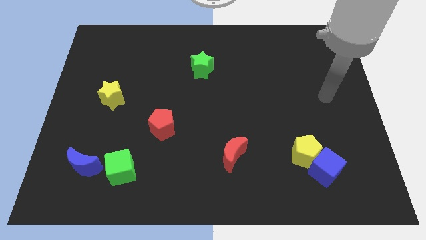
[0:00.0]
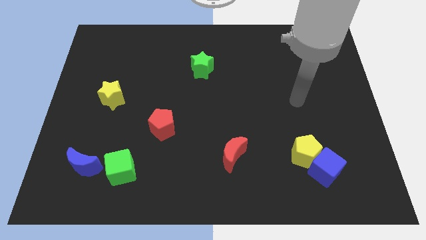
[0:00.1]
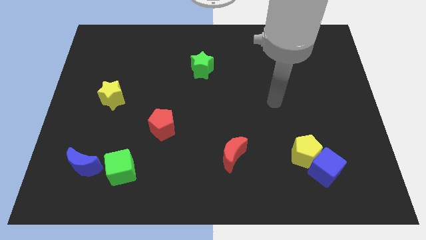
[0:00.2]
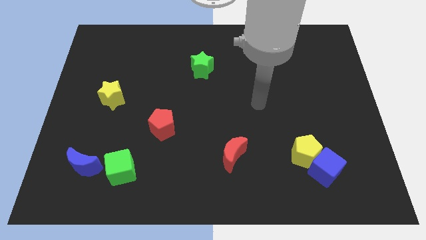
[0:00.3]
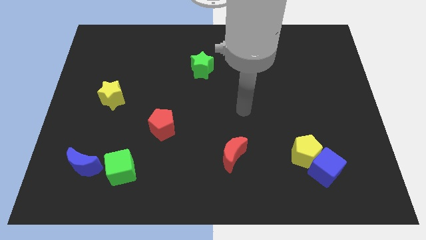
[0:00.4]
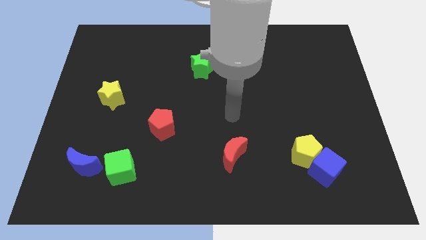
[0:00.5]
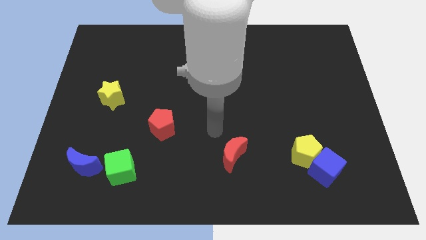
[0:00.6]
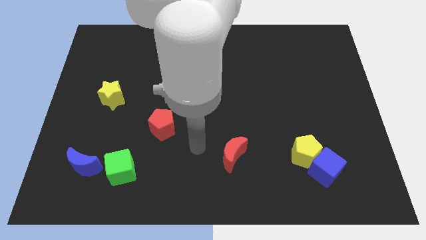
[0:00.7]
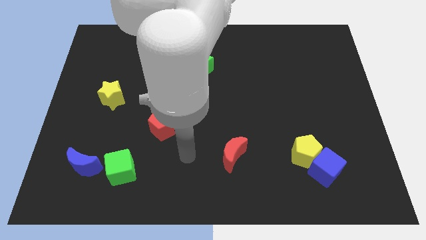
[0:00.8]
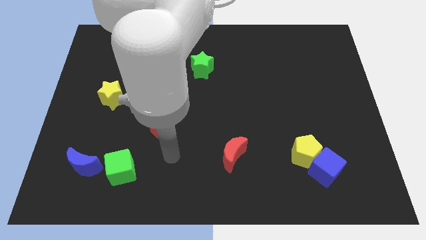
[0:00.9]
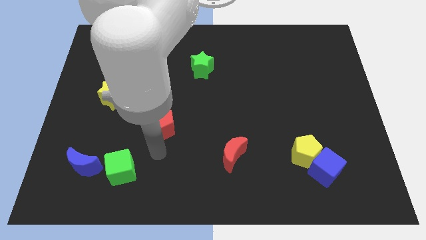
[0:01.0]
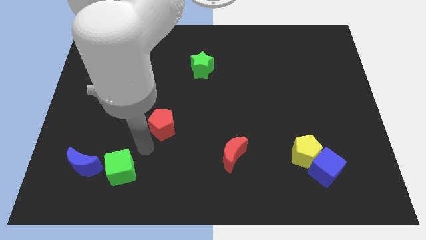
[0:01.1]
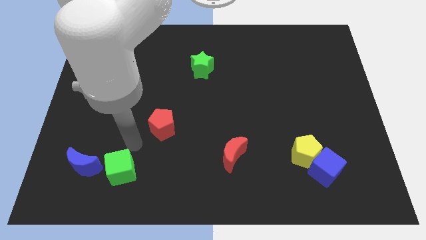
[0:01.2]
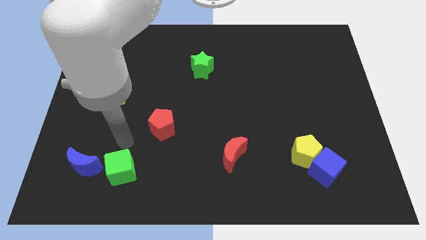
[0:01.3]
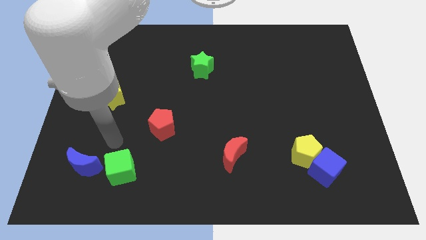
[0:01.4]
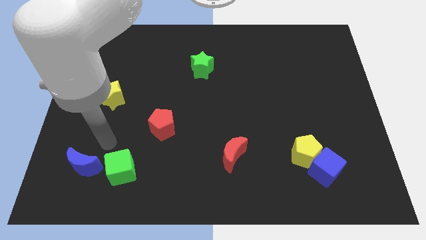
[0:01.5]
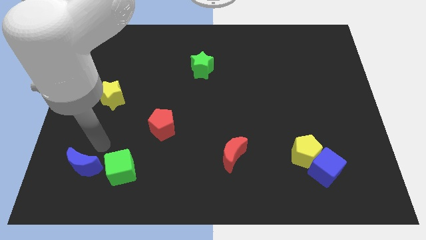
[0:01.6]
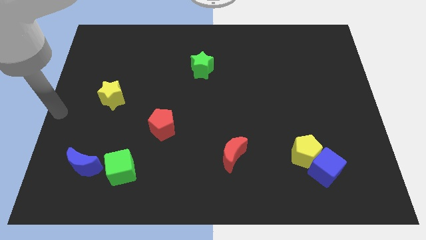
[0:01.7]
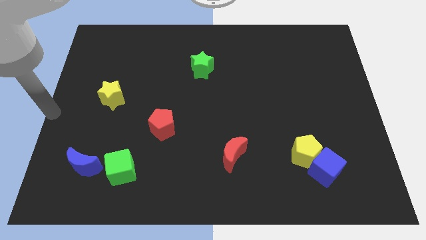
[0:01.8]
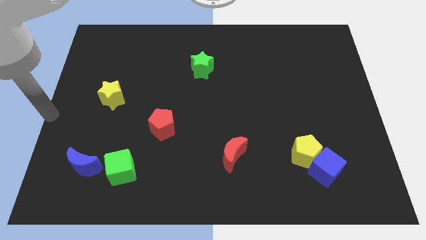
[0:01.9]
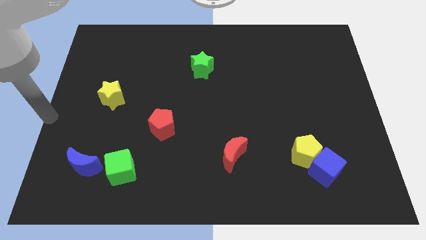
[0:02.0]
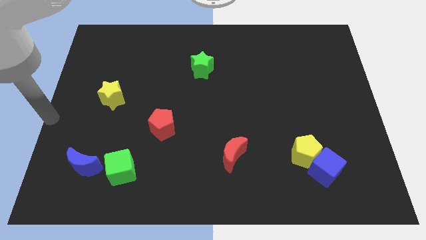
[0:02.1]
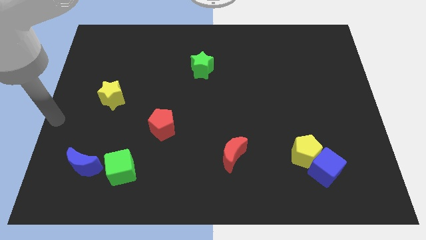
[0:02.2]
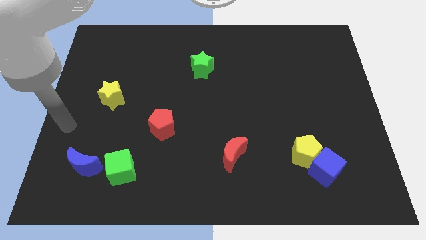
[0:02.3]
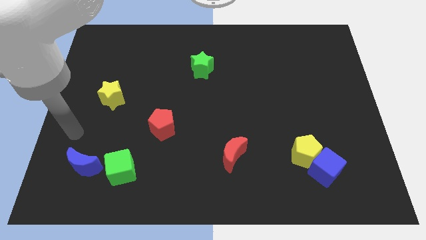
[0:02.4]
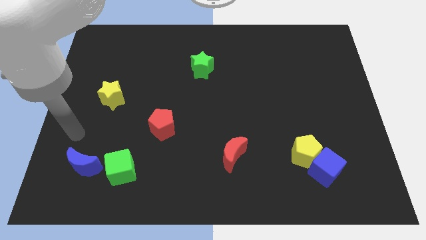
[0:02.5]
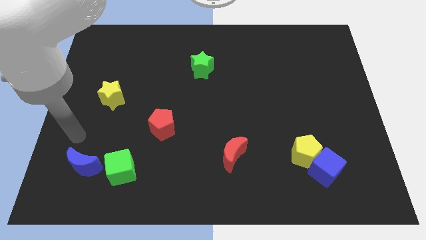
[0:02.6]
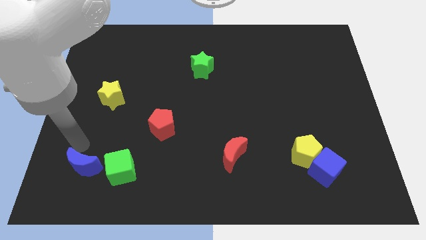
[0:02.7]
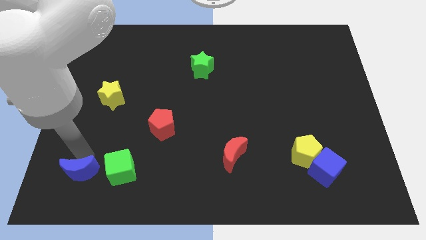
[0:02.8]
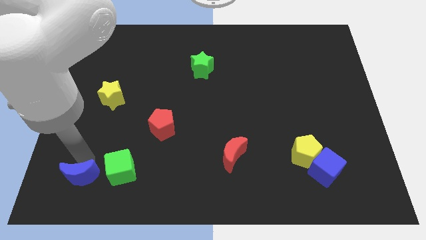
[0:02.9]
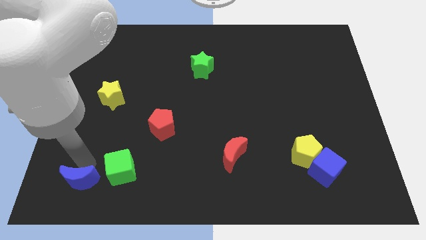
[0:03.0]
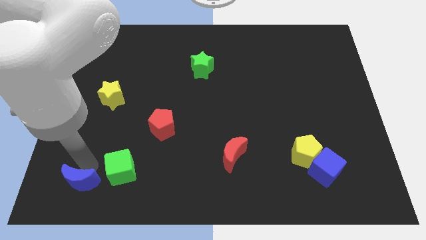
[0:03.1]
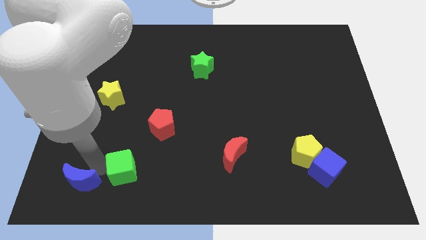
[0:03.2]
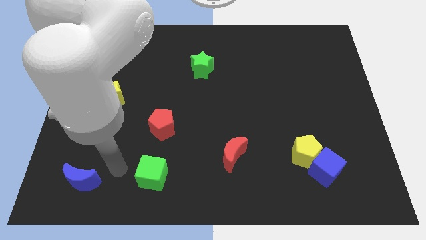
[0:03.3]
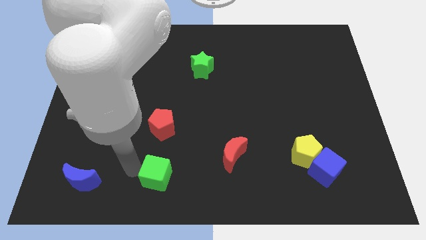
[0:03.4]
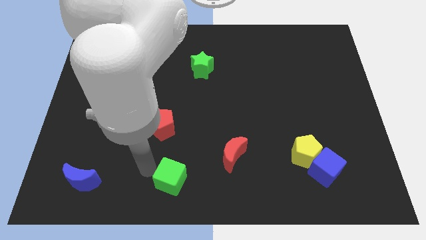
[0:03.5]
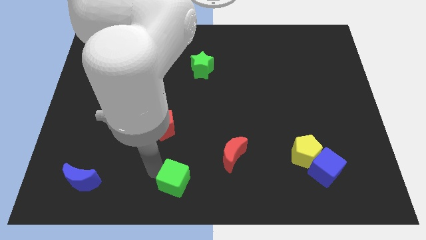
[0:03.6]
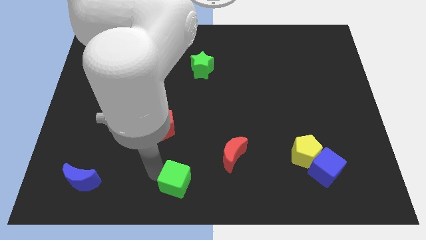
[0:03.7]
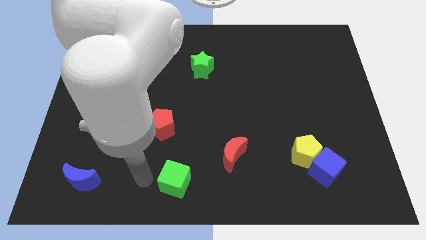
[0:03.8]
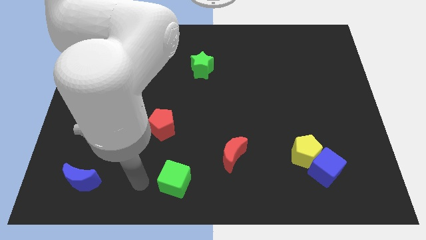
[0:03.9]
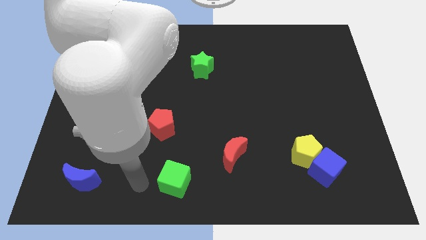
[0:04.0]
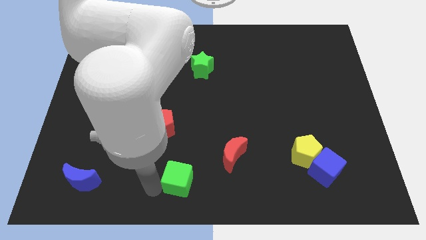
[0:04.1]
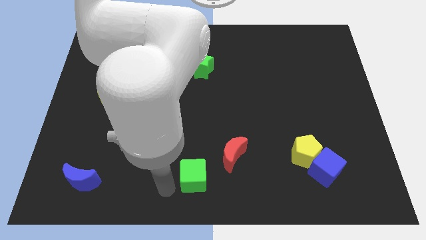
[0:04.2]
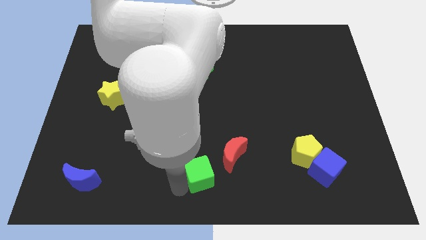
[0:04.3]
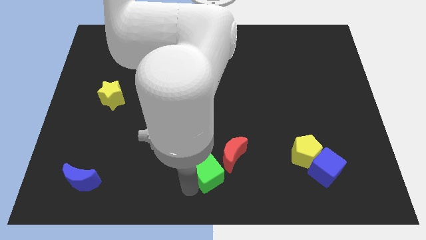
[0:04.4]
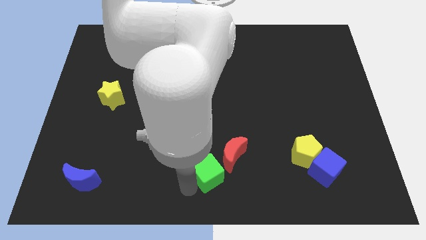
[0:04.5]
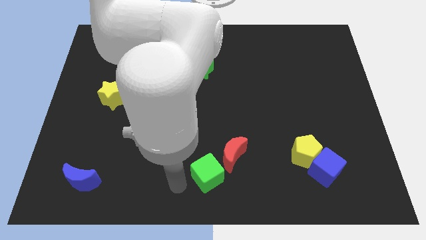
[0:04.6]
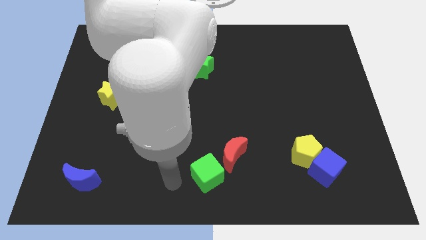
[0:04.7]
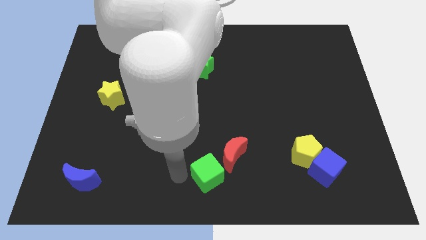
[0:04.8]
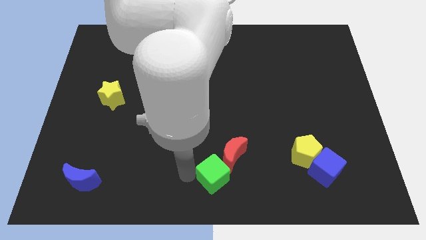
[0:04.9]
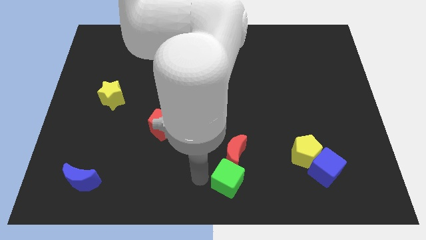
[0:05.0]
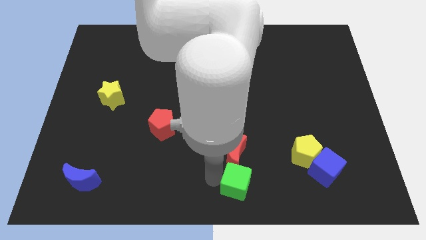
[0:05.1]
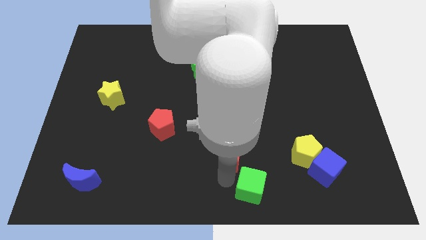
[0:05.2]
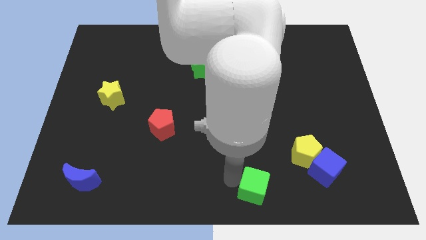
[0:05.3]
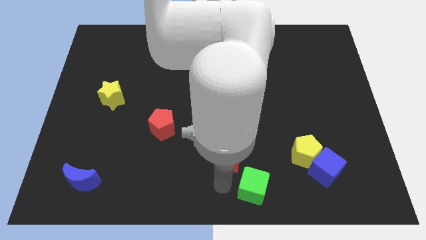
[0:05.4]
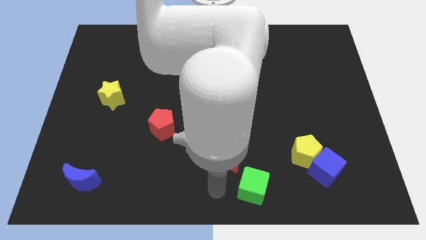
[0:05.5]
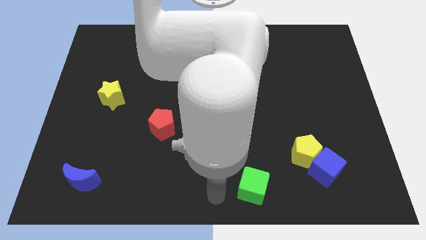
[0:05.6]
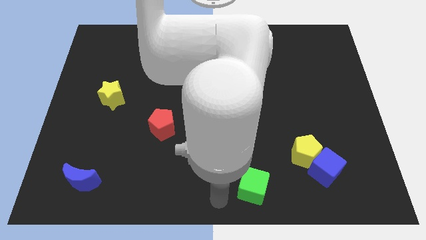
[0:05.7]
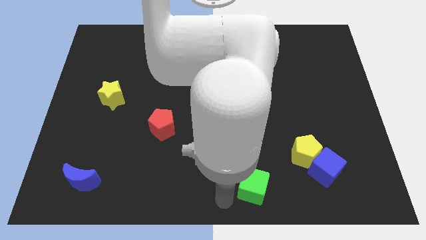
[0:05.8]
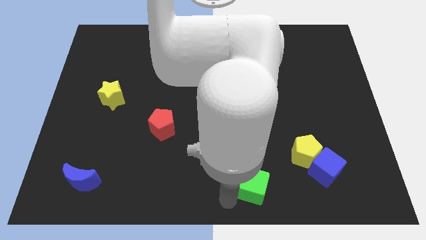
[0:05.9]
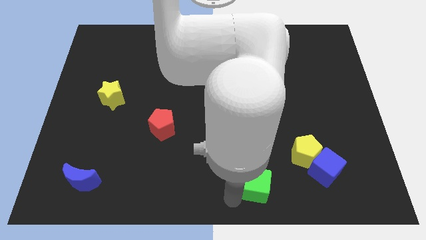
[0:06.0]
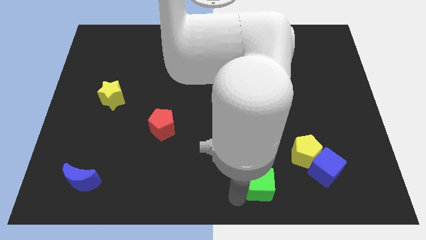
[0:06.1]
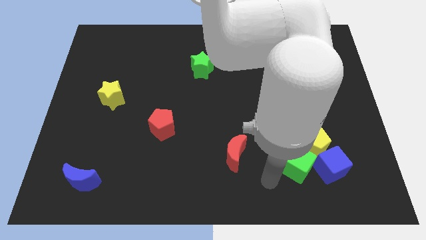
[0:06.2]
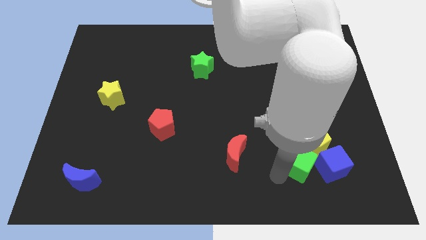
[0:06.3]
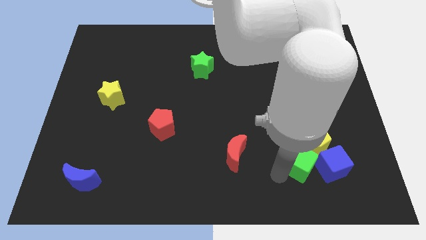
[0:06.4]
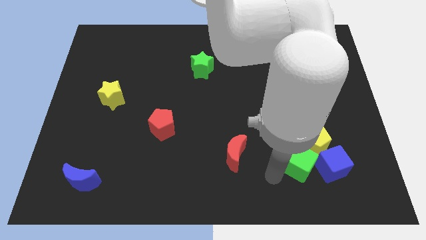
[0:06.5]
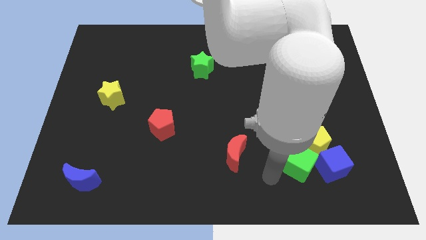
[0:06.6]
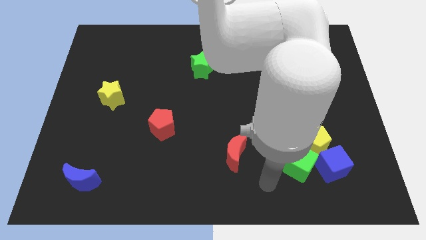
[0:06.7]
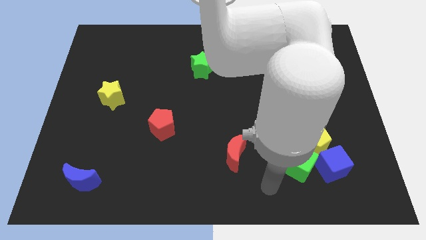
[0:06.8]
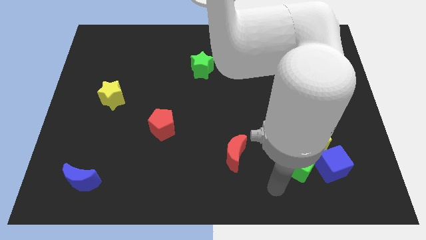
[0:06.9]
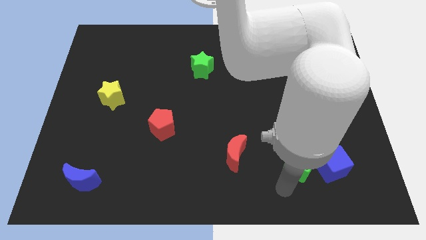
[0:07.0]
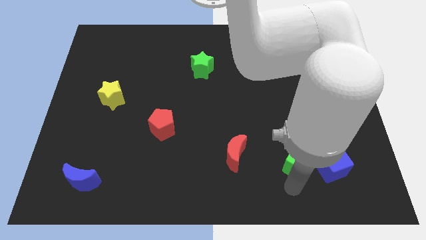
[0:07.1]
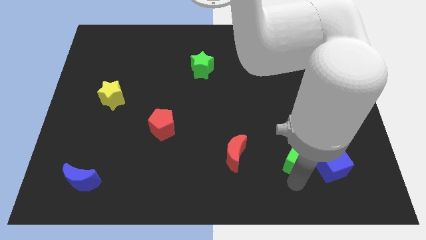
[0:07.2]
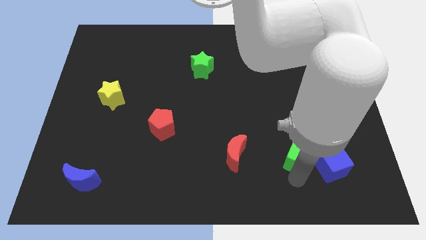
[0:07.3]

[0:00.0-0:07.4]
put the green cube towards the yellow pentagon

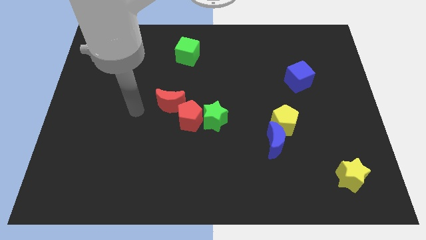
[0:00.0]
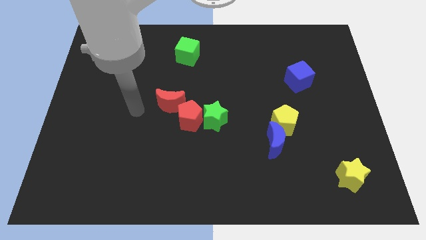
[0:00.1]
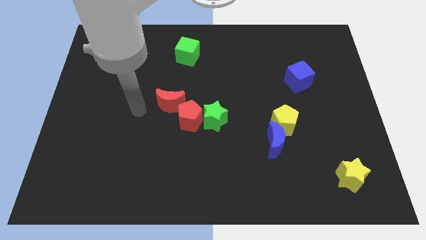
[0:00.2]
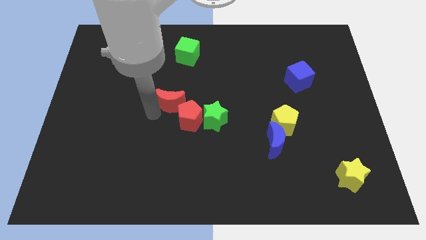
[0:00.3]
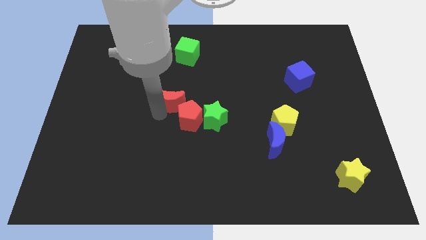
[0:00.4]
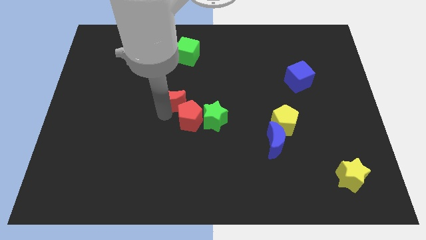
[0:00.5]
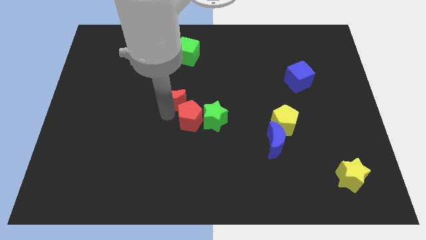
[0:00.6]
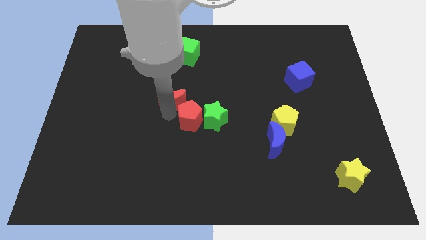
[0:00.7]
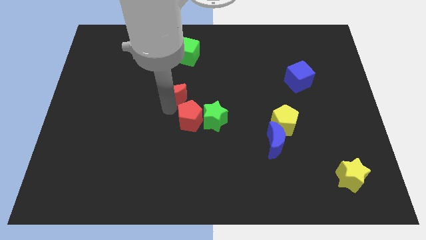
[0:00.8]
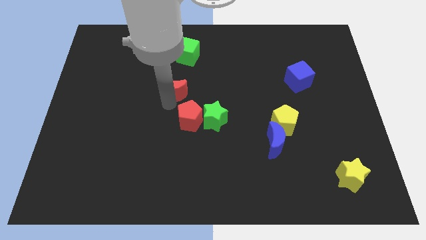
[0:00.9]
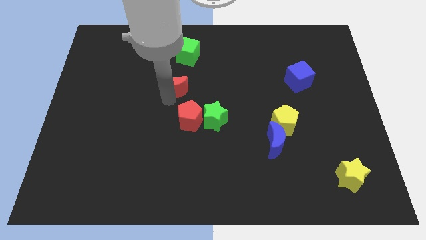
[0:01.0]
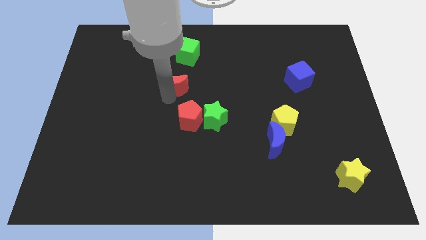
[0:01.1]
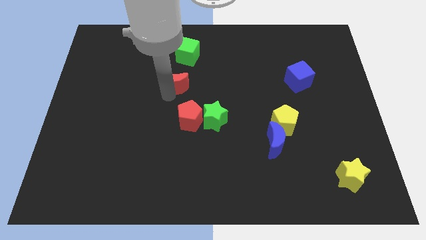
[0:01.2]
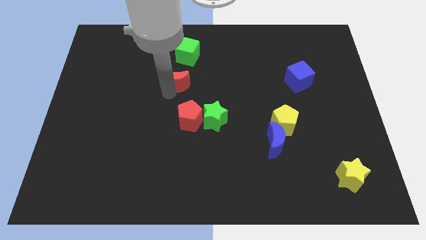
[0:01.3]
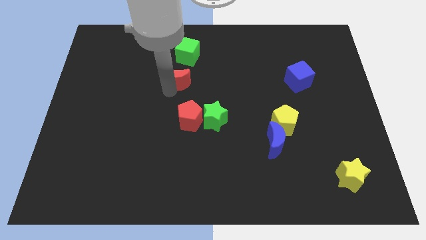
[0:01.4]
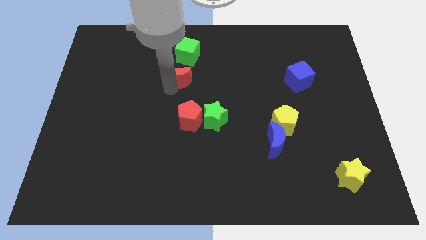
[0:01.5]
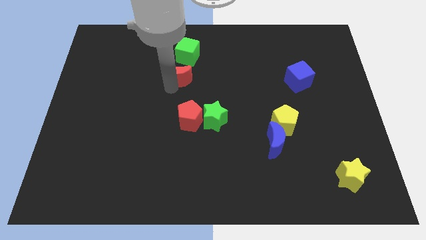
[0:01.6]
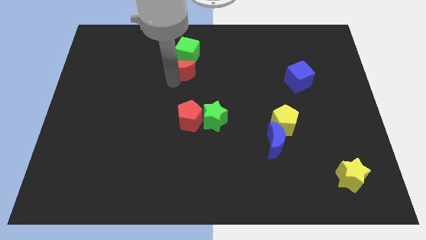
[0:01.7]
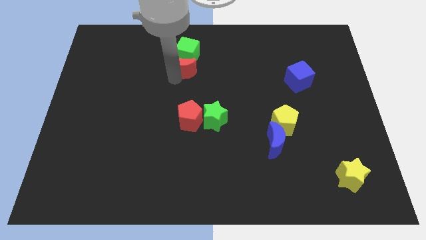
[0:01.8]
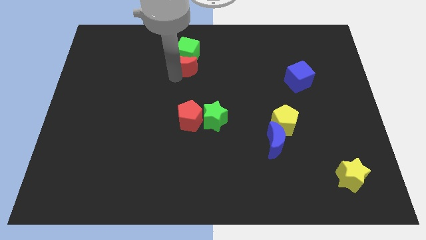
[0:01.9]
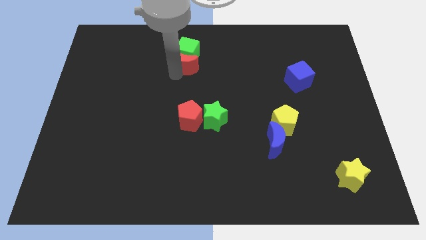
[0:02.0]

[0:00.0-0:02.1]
put the red moon next to the green cube
